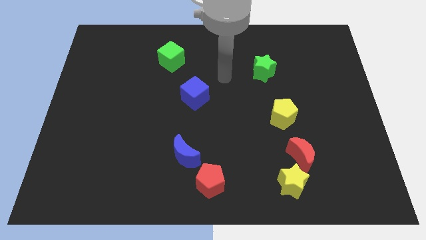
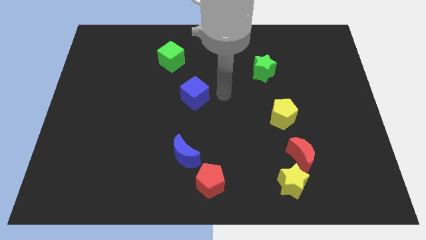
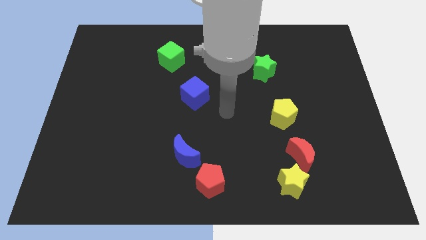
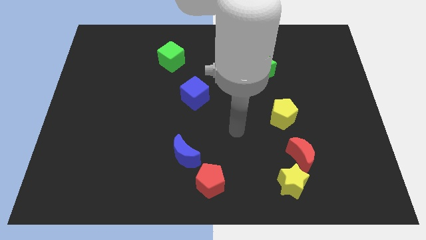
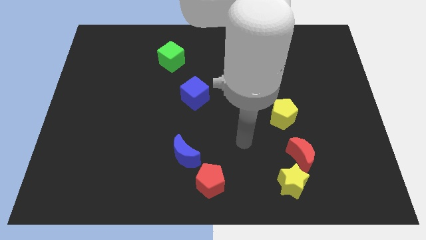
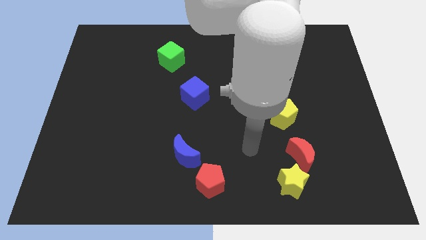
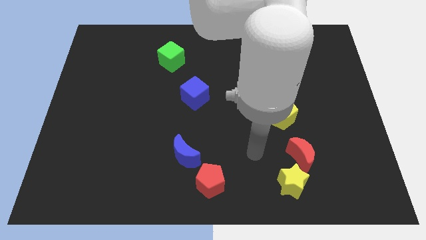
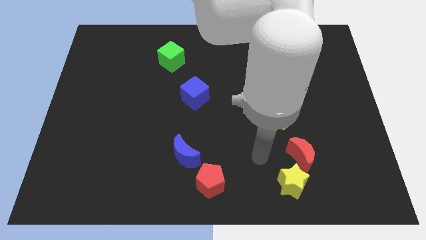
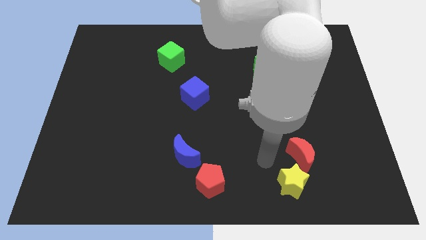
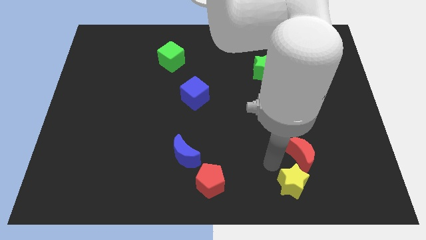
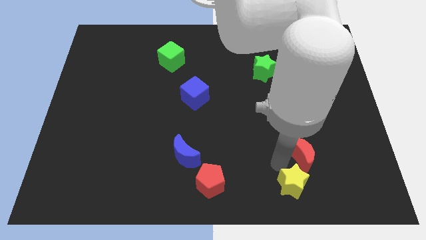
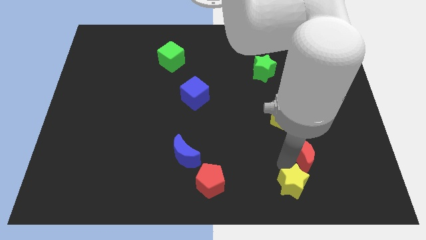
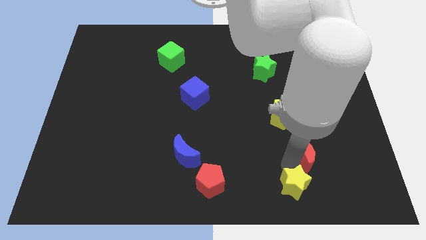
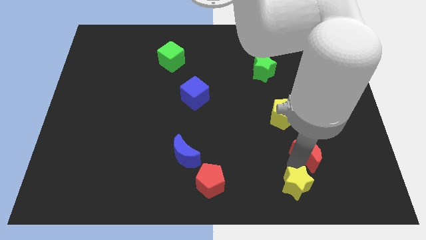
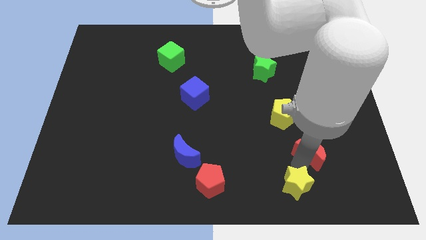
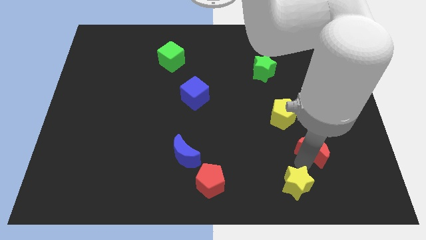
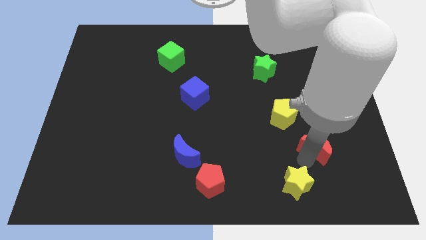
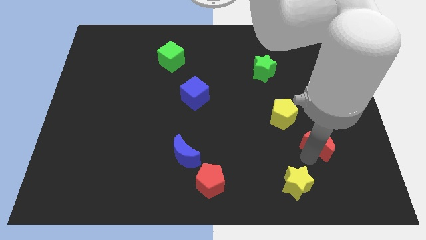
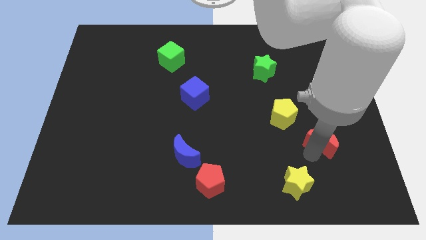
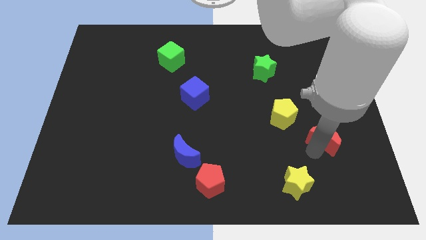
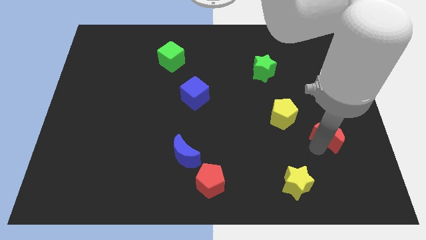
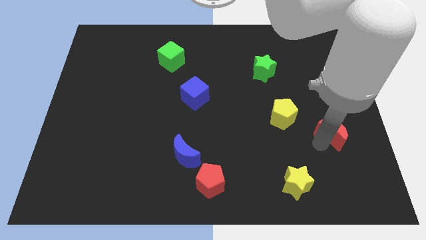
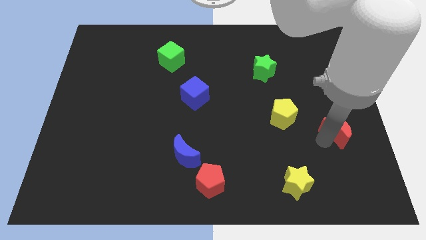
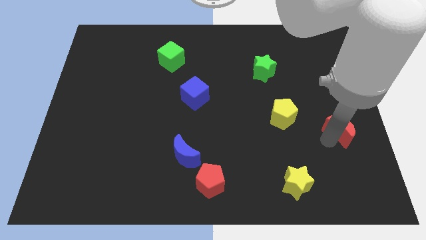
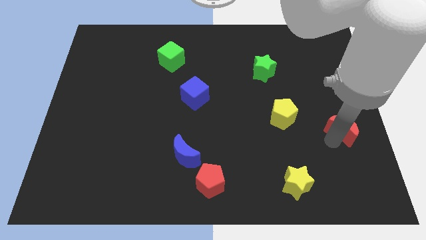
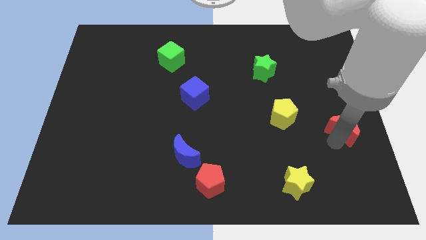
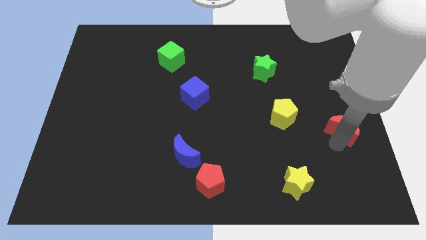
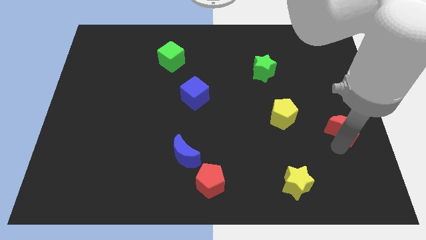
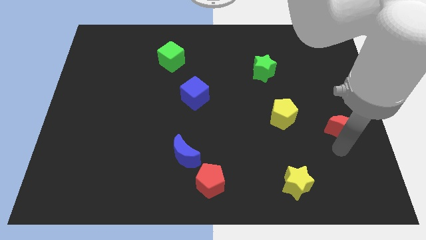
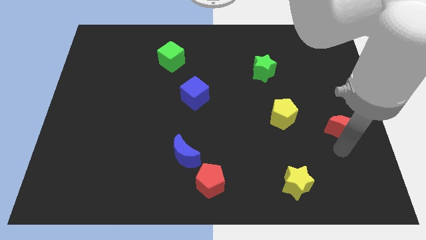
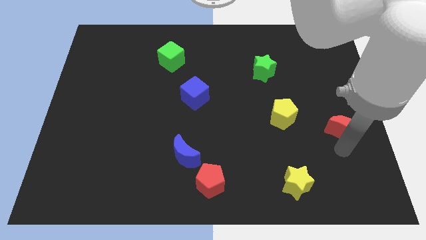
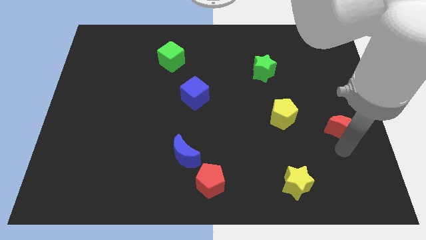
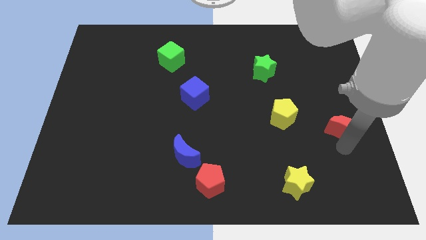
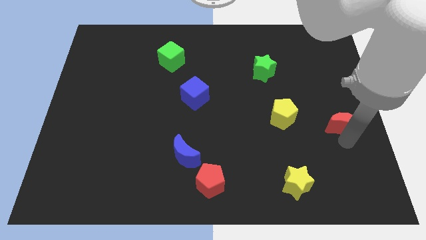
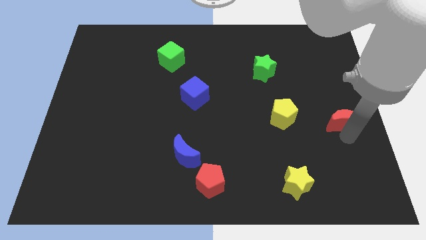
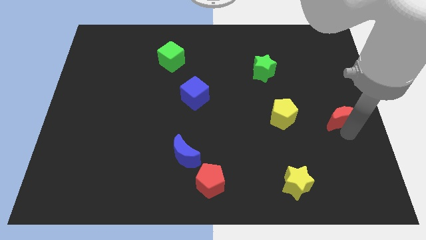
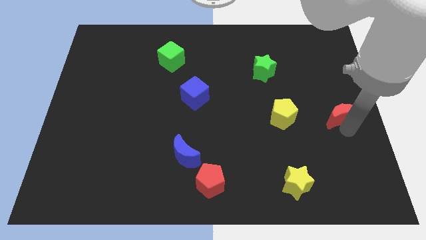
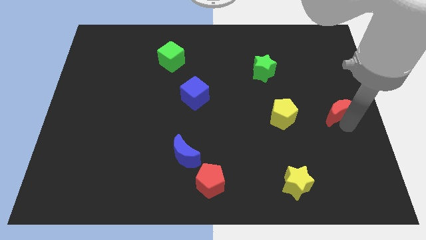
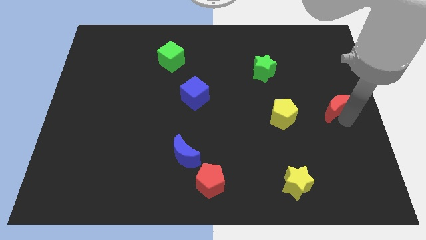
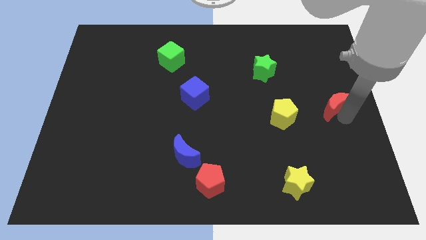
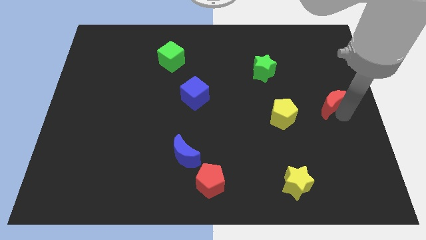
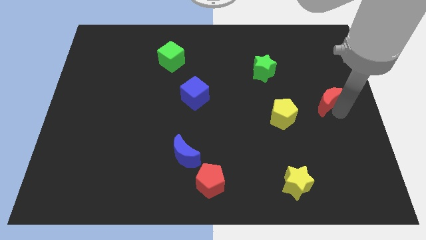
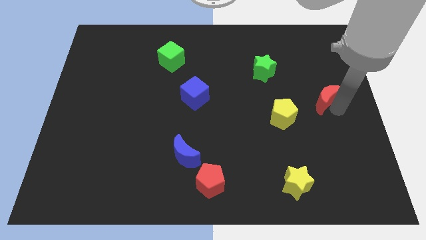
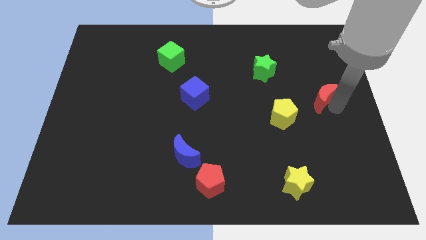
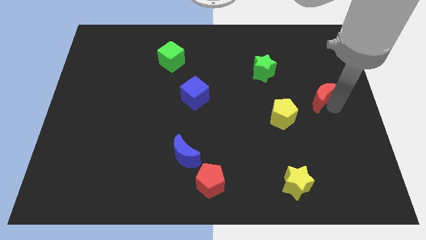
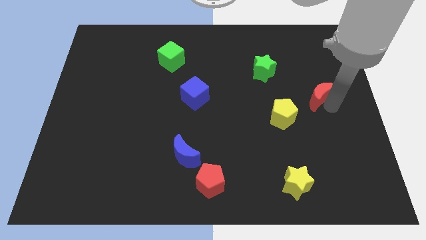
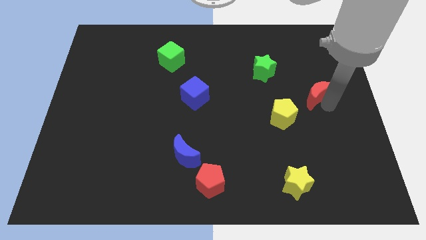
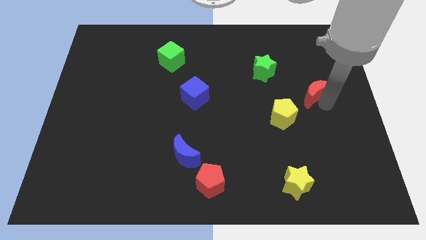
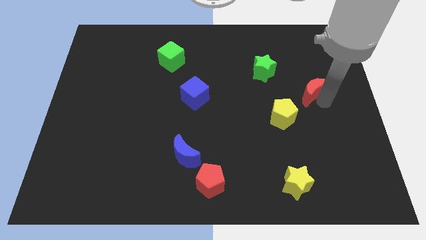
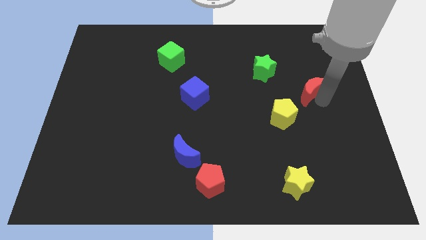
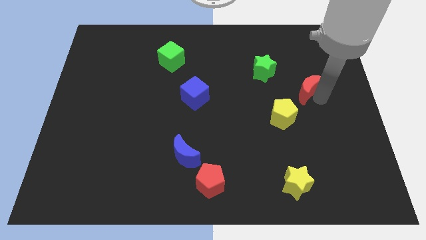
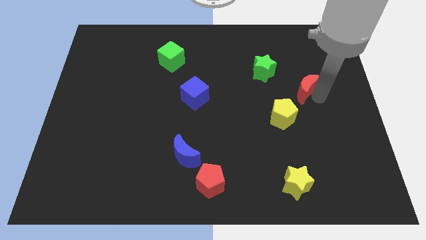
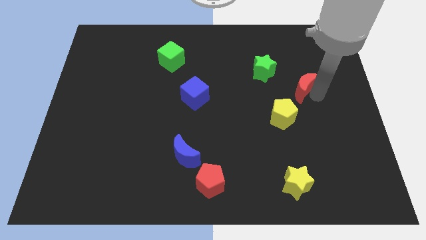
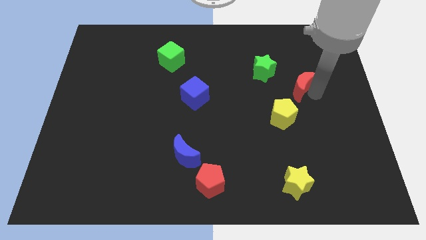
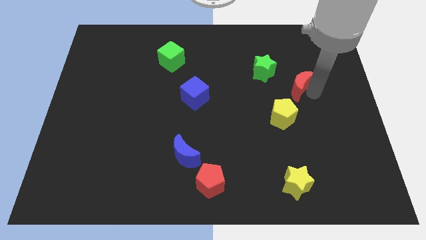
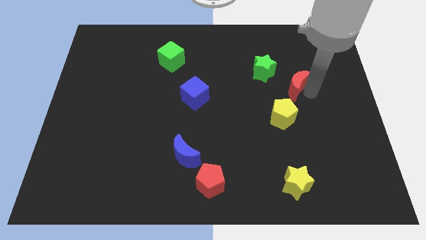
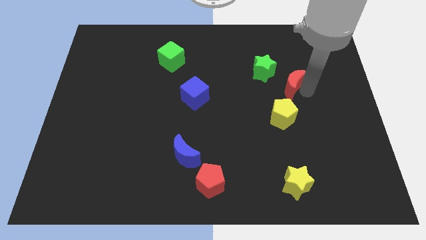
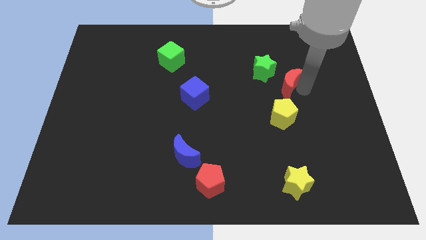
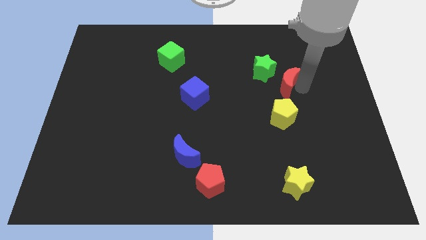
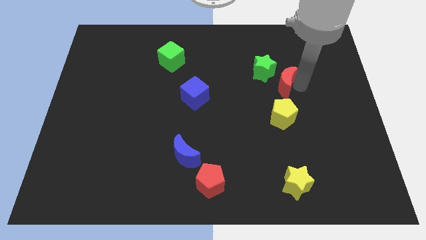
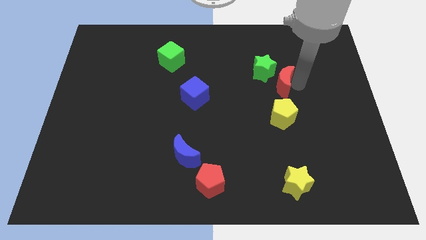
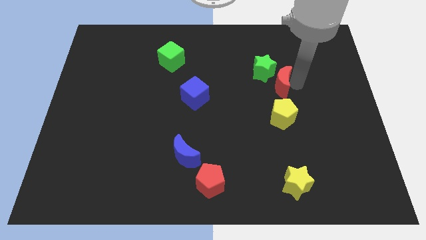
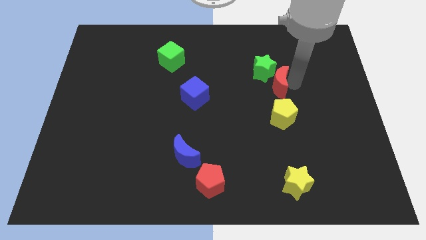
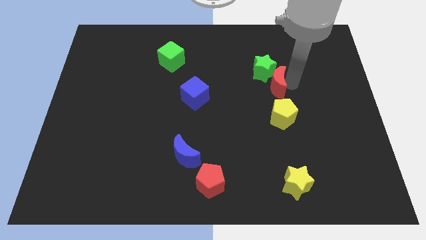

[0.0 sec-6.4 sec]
put the red moon close to the green star

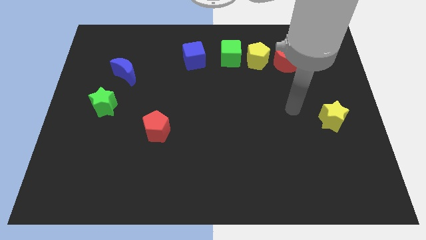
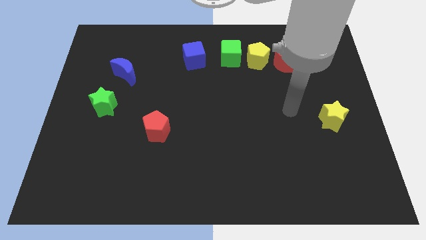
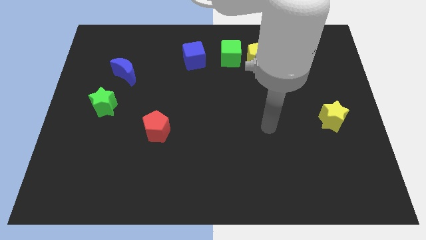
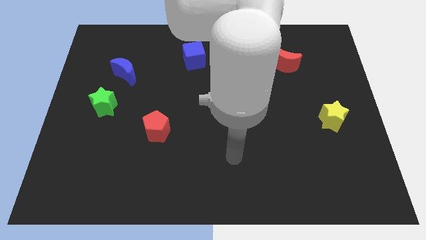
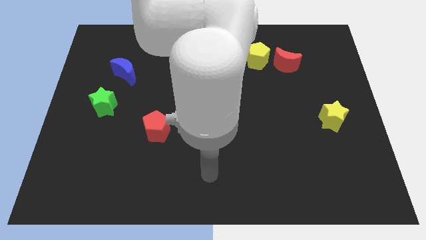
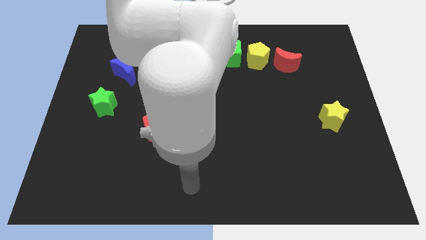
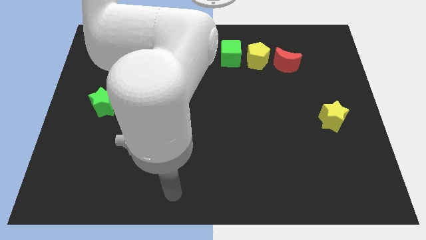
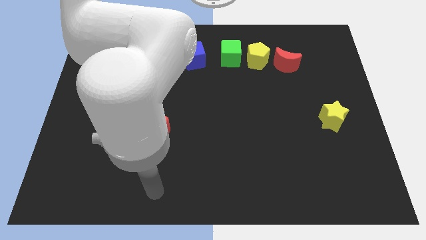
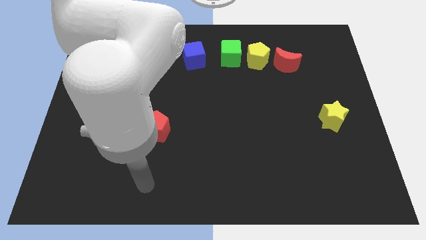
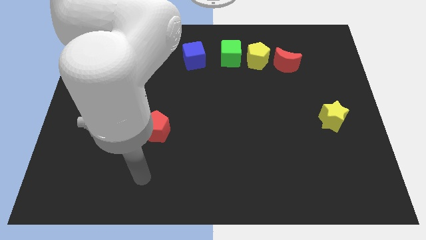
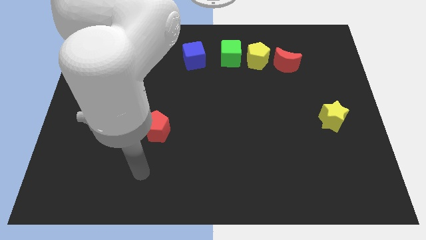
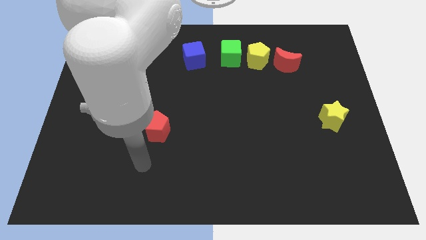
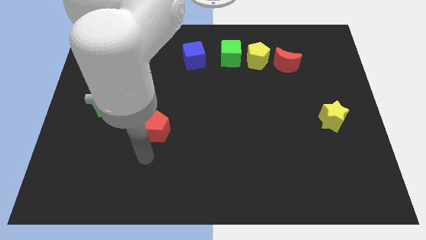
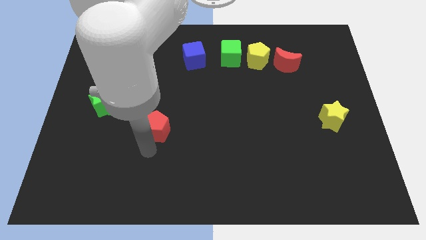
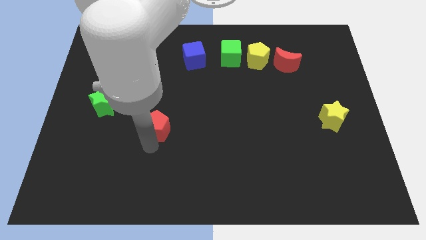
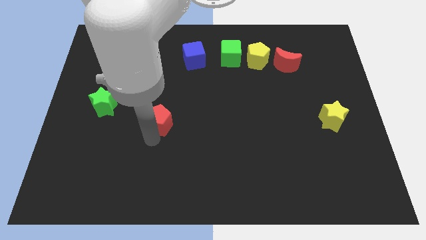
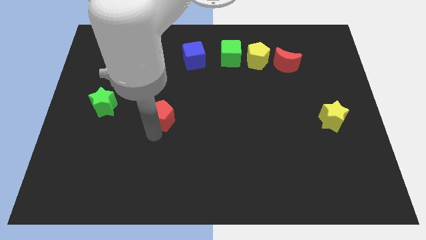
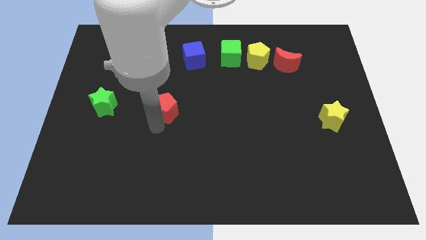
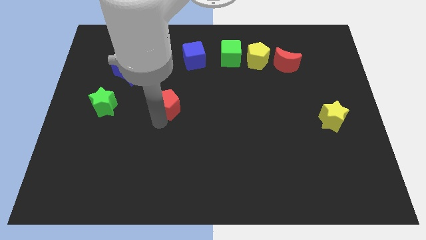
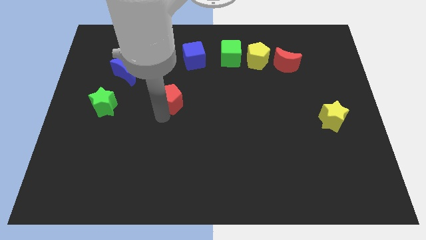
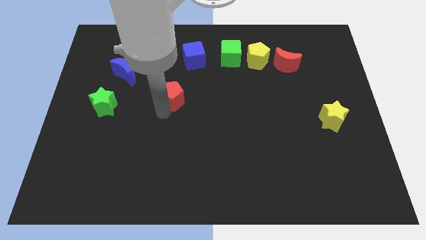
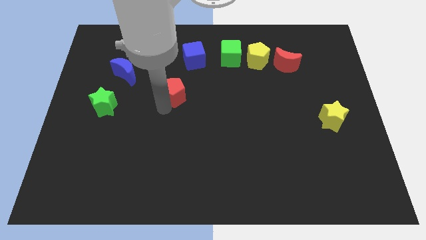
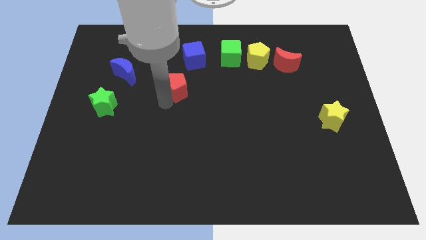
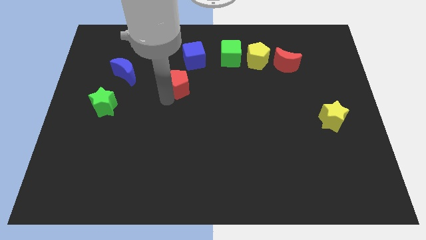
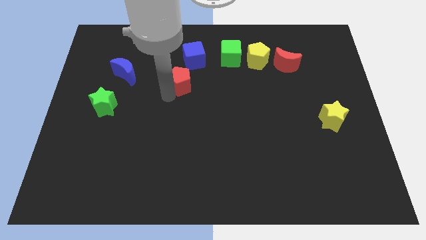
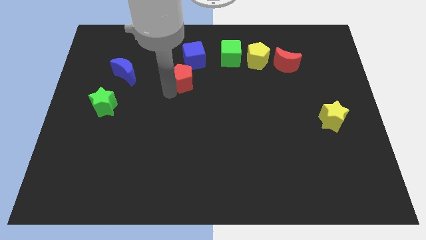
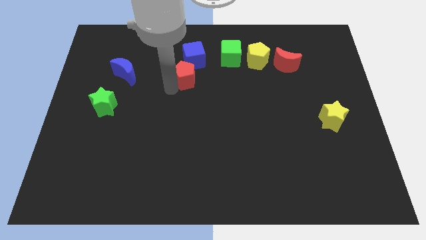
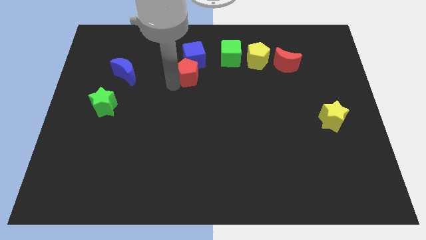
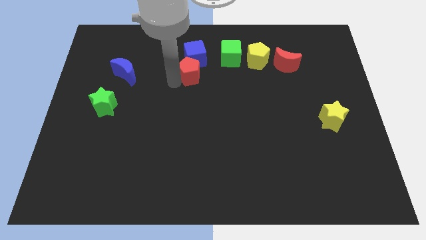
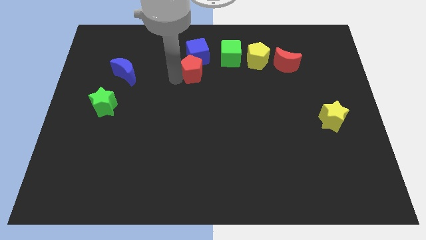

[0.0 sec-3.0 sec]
put the red pentagon next to the blue cube
